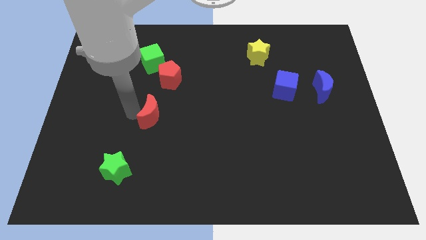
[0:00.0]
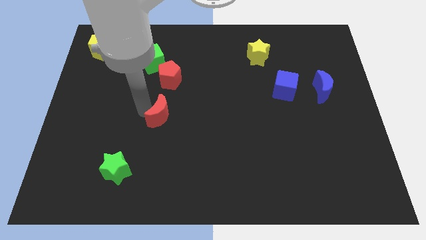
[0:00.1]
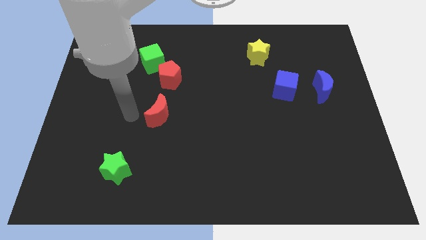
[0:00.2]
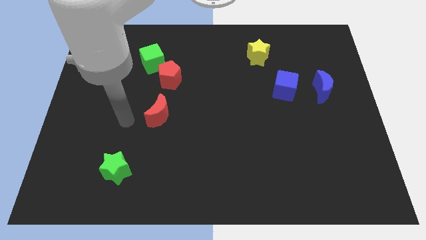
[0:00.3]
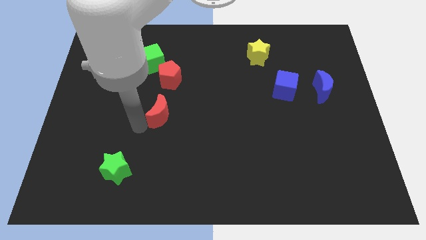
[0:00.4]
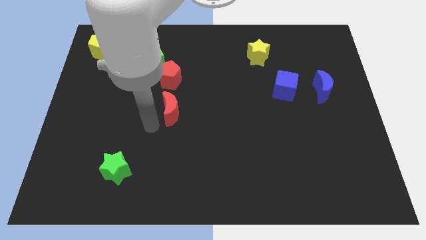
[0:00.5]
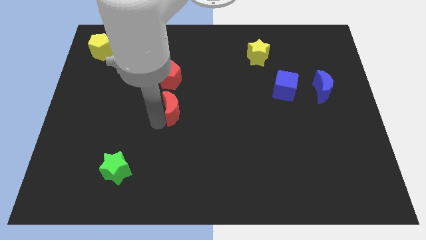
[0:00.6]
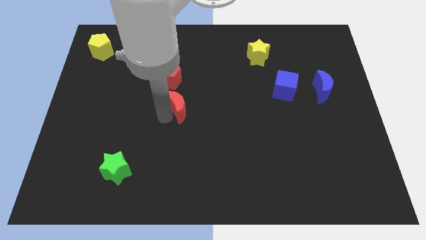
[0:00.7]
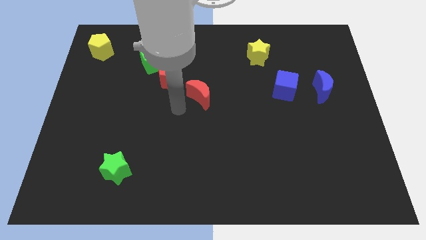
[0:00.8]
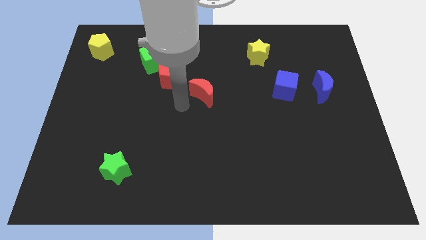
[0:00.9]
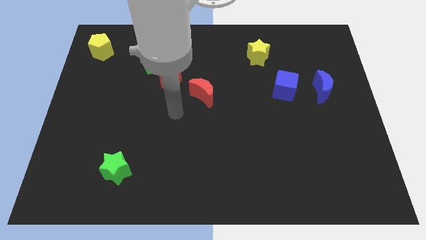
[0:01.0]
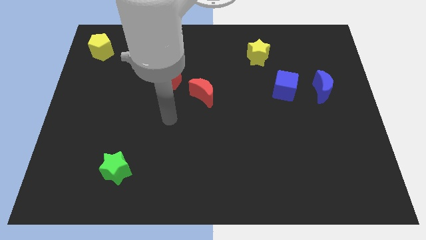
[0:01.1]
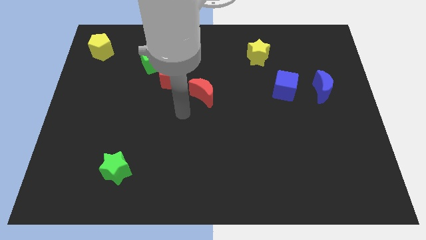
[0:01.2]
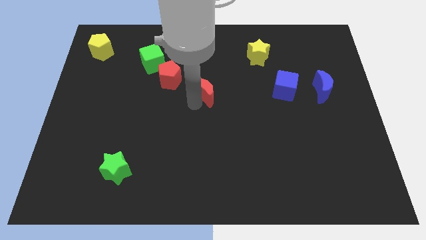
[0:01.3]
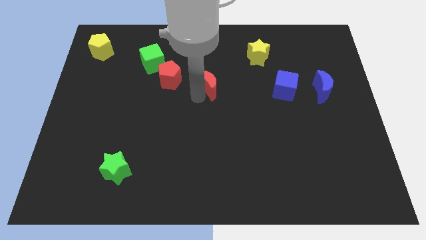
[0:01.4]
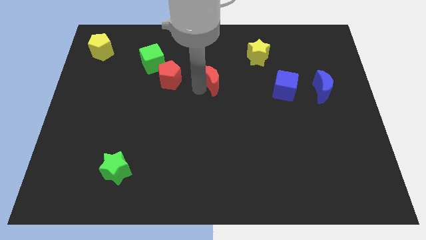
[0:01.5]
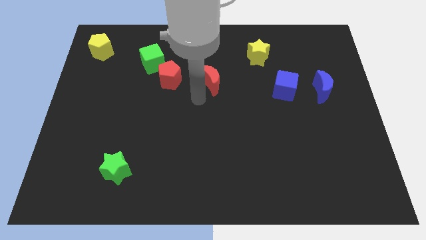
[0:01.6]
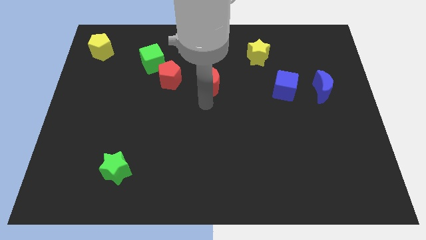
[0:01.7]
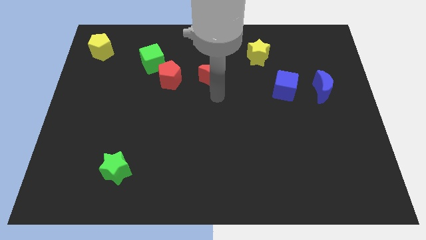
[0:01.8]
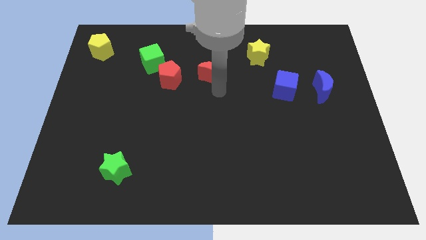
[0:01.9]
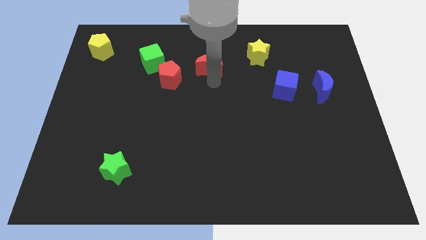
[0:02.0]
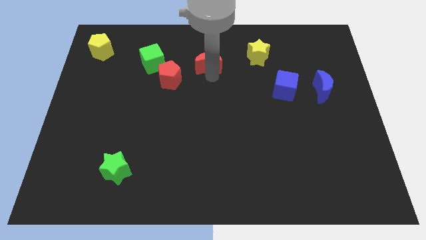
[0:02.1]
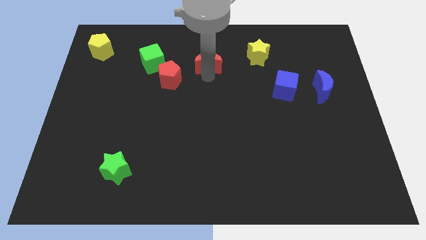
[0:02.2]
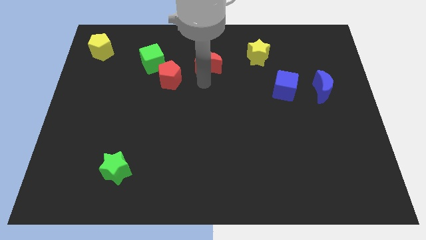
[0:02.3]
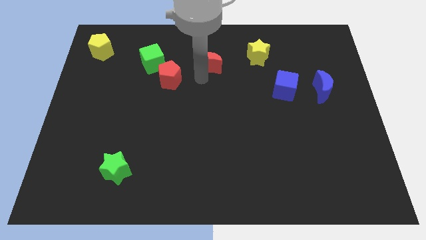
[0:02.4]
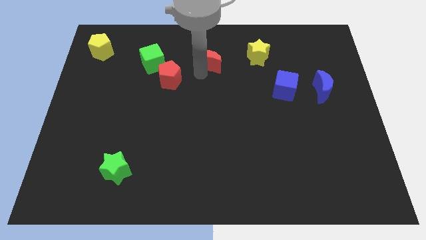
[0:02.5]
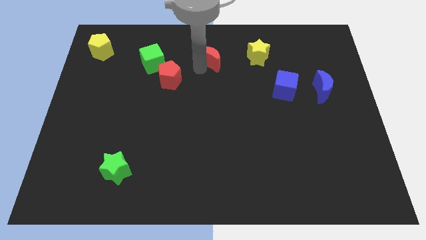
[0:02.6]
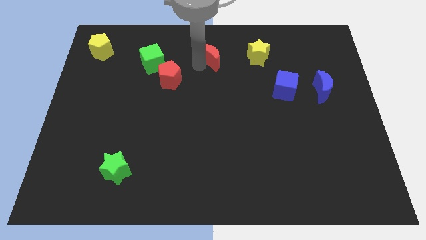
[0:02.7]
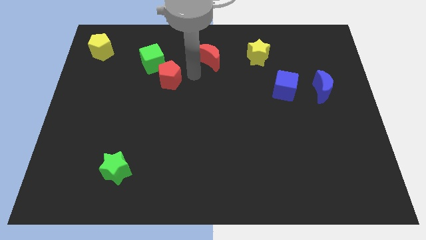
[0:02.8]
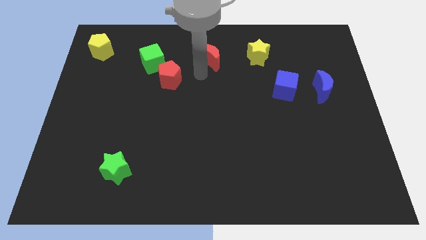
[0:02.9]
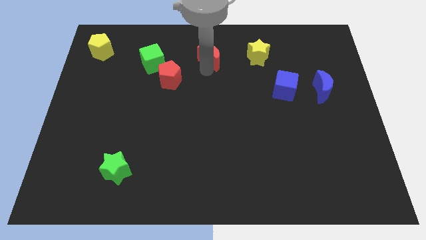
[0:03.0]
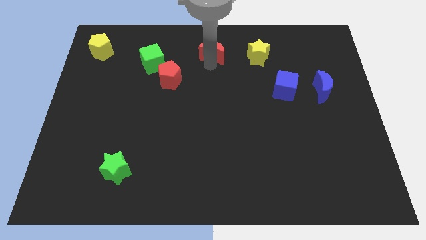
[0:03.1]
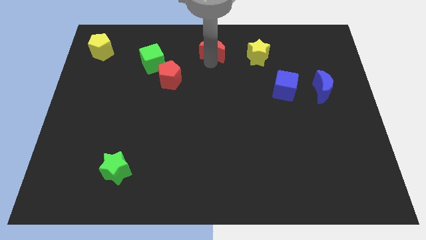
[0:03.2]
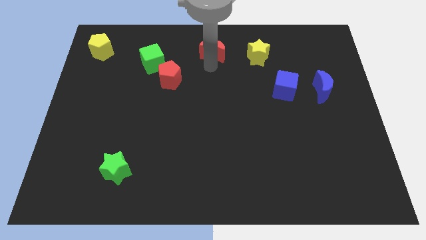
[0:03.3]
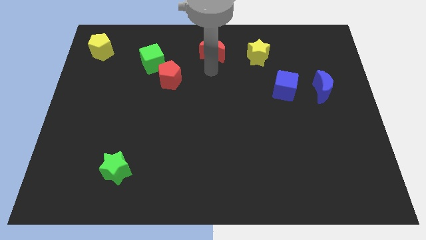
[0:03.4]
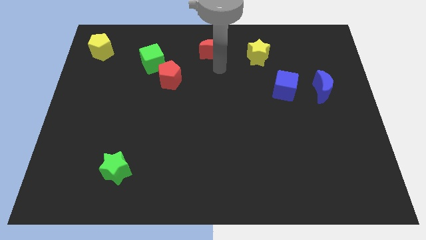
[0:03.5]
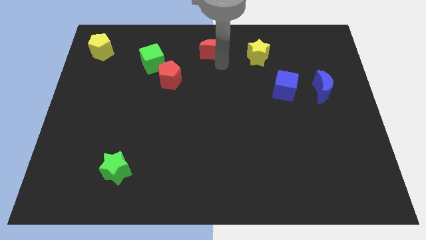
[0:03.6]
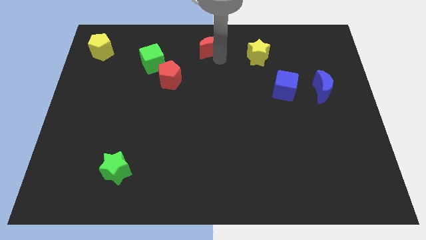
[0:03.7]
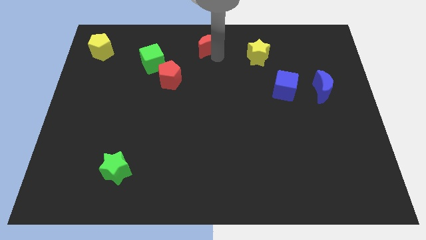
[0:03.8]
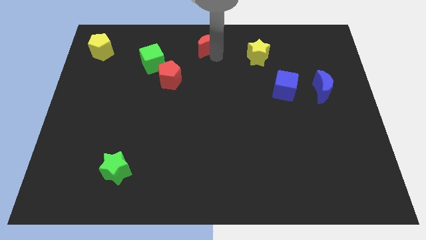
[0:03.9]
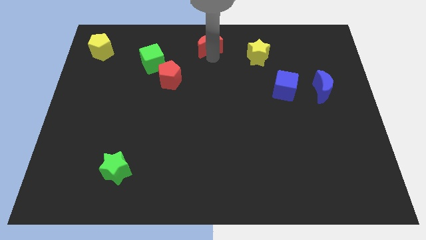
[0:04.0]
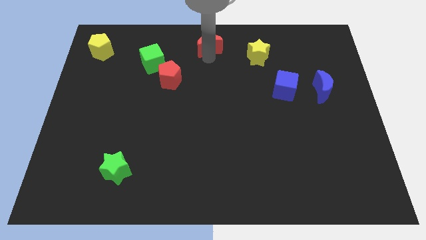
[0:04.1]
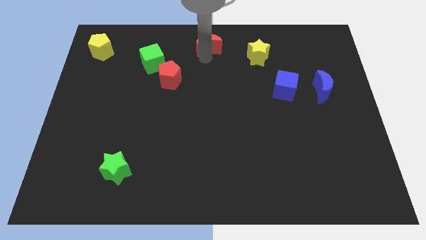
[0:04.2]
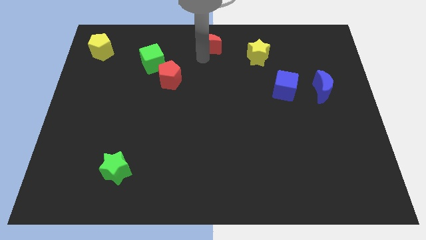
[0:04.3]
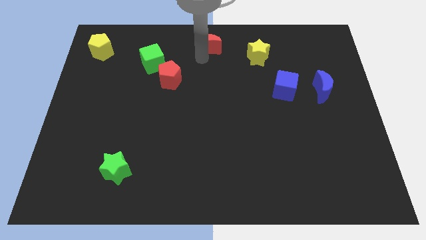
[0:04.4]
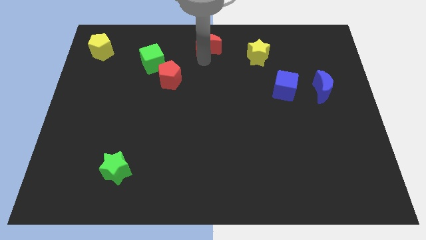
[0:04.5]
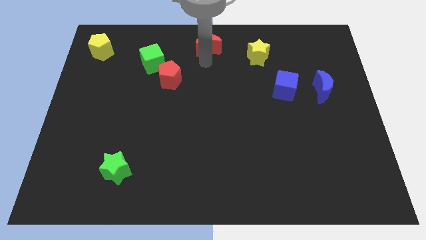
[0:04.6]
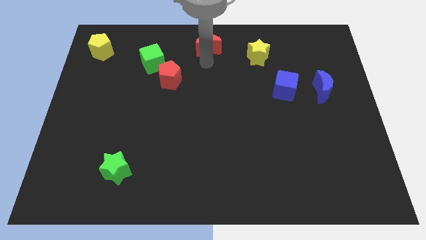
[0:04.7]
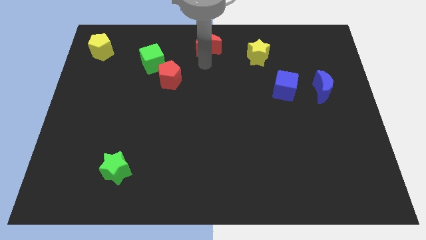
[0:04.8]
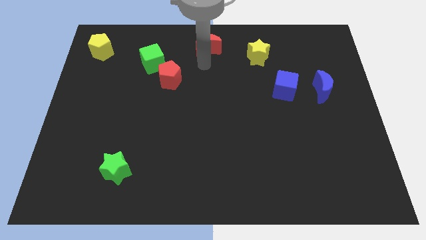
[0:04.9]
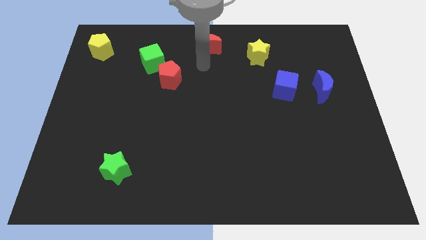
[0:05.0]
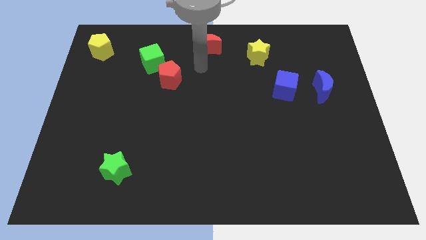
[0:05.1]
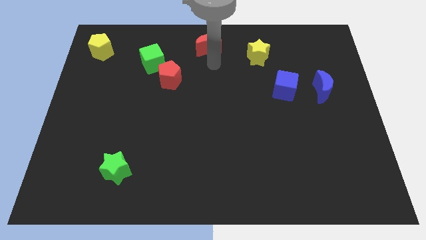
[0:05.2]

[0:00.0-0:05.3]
move the red crescent to the top center

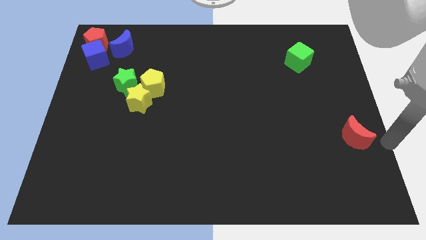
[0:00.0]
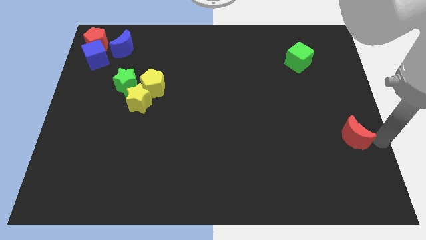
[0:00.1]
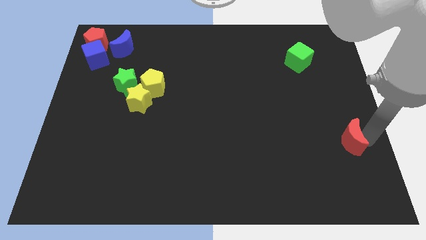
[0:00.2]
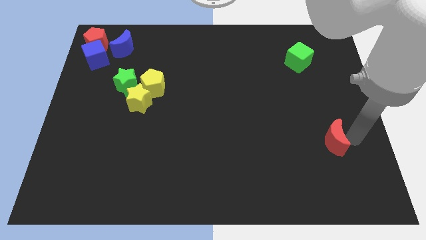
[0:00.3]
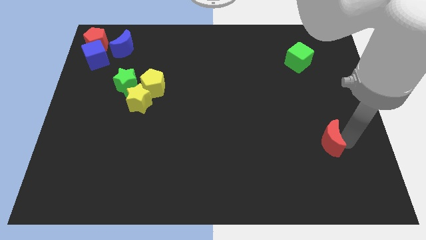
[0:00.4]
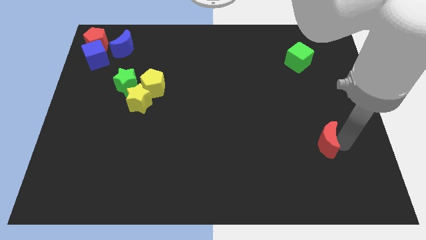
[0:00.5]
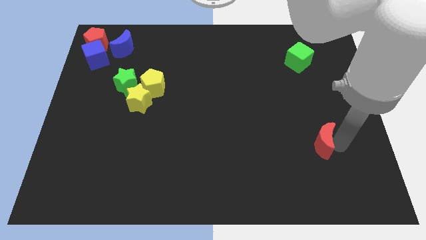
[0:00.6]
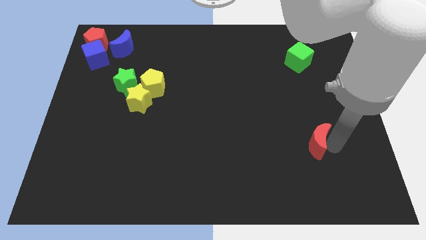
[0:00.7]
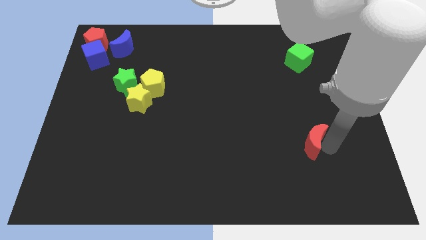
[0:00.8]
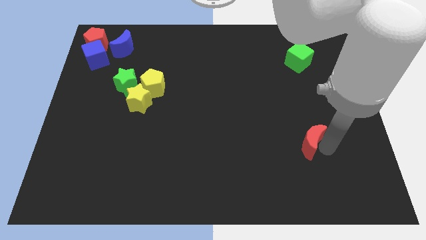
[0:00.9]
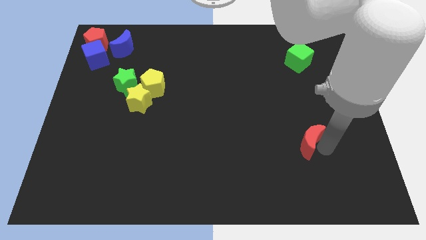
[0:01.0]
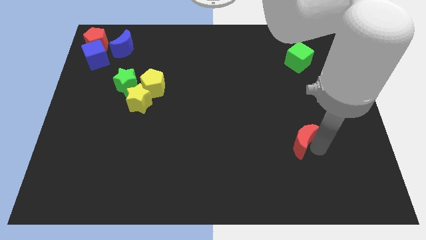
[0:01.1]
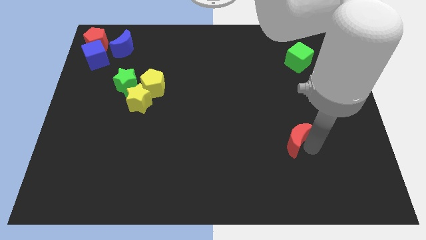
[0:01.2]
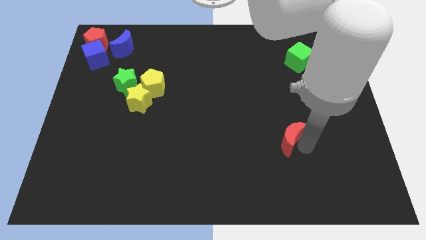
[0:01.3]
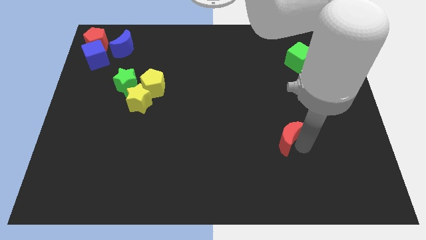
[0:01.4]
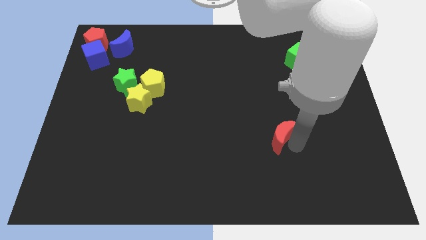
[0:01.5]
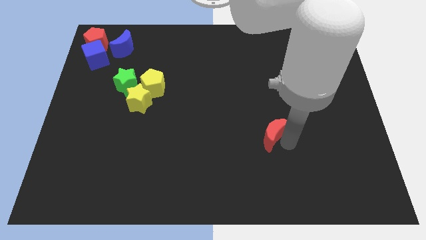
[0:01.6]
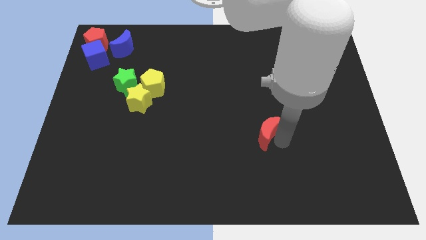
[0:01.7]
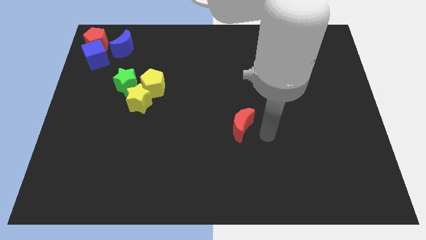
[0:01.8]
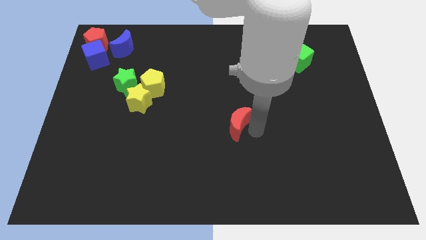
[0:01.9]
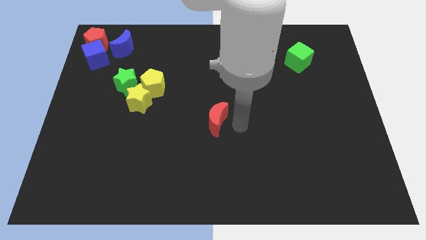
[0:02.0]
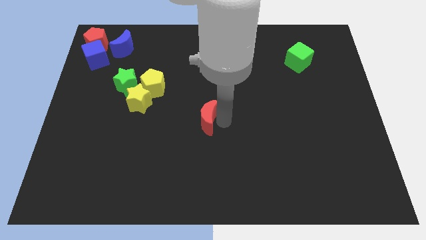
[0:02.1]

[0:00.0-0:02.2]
place the red moon at the center of the board

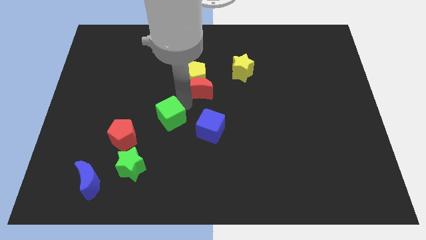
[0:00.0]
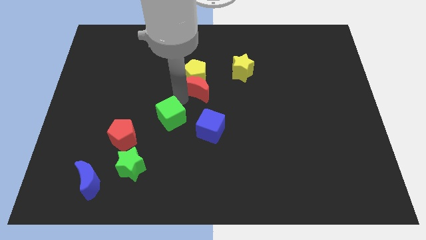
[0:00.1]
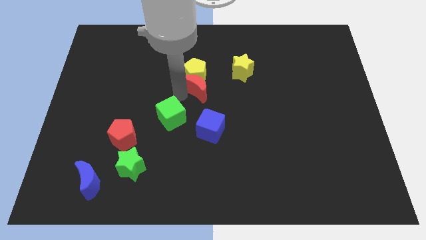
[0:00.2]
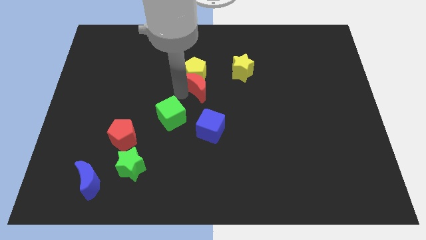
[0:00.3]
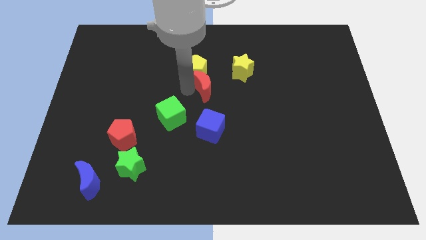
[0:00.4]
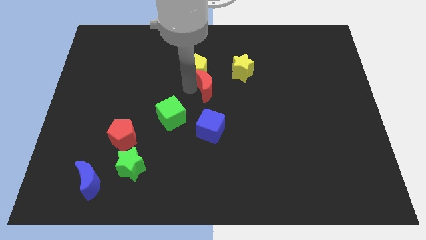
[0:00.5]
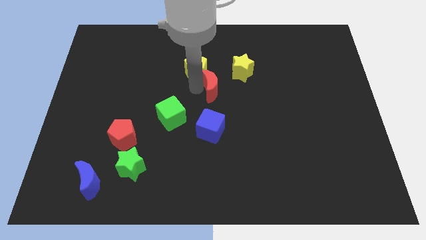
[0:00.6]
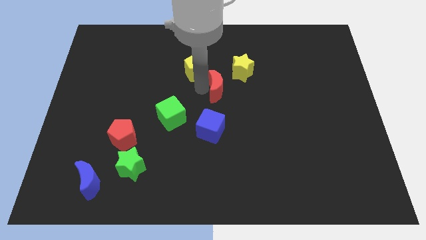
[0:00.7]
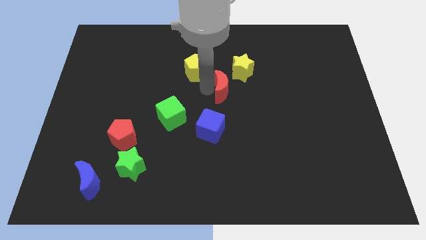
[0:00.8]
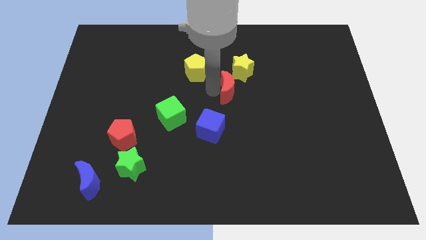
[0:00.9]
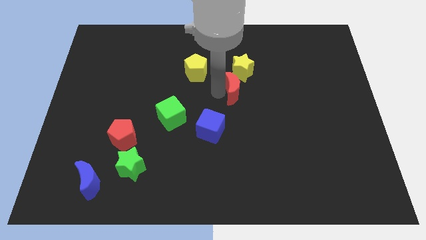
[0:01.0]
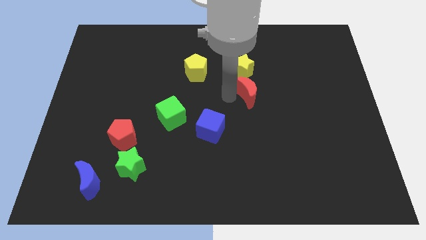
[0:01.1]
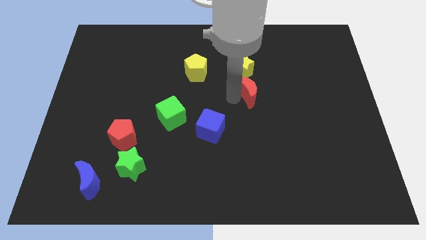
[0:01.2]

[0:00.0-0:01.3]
push the red crescent below the yellow star
